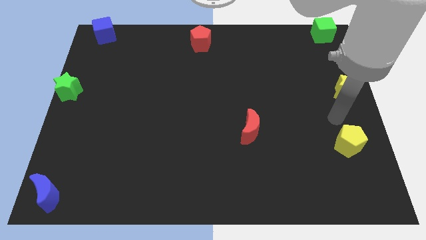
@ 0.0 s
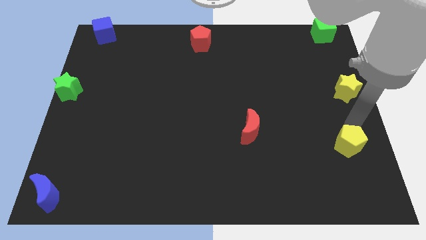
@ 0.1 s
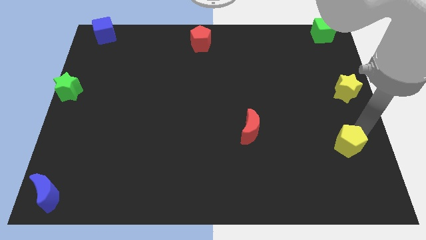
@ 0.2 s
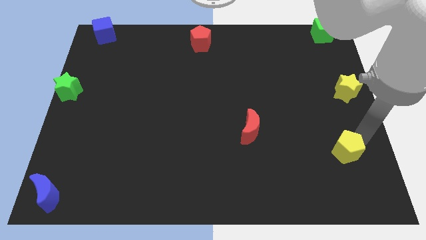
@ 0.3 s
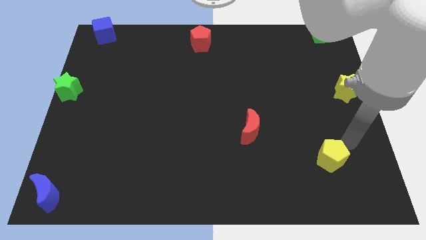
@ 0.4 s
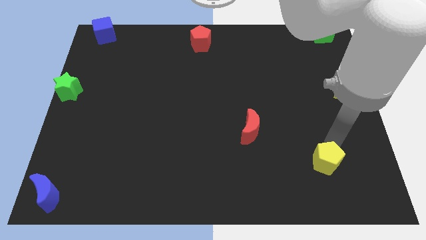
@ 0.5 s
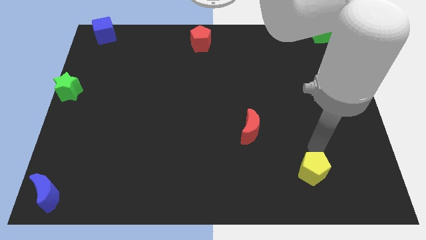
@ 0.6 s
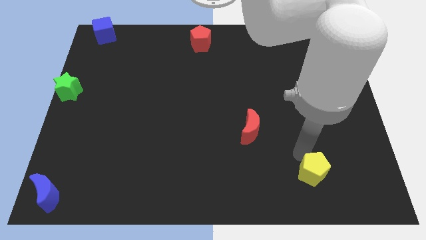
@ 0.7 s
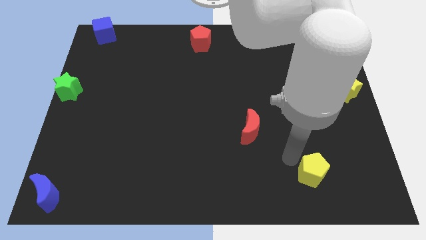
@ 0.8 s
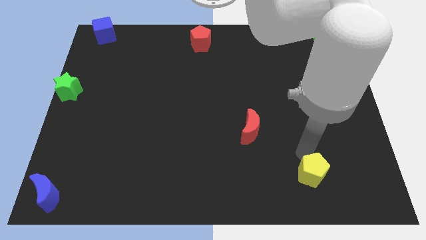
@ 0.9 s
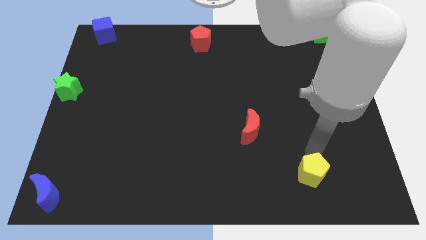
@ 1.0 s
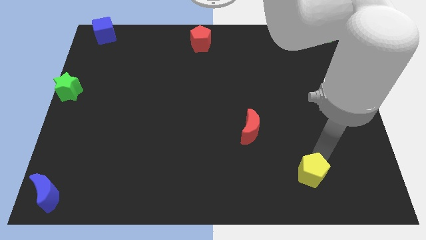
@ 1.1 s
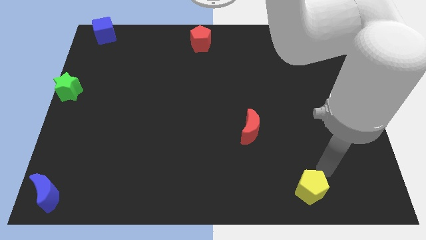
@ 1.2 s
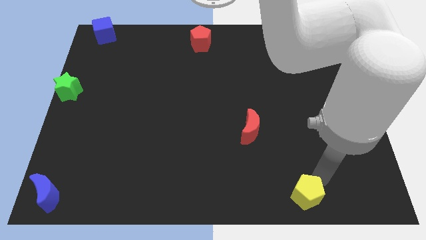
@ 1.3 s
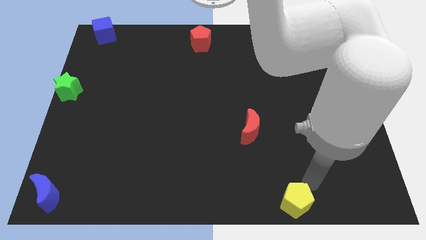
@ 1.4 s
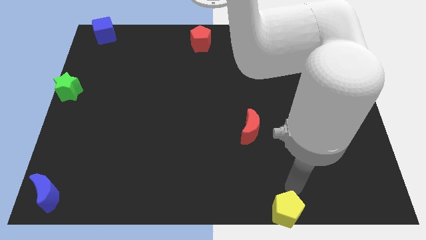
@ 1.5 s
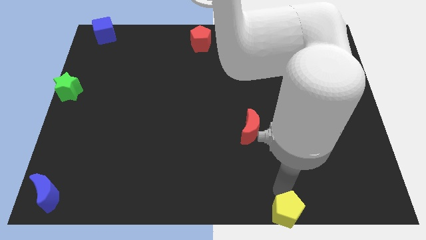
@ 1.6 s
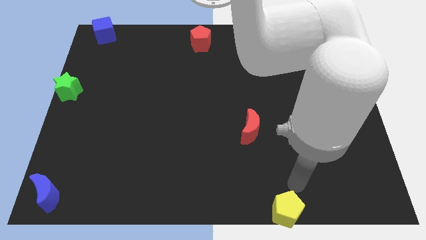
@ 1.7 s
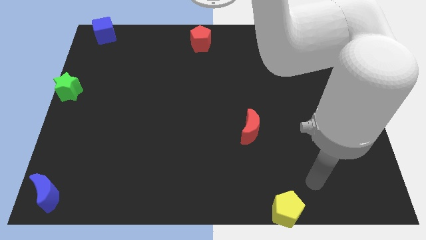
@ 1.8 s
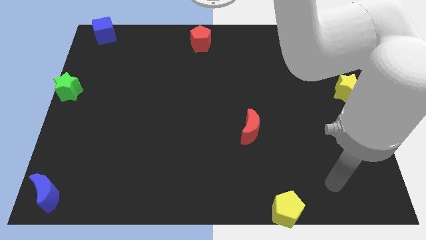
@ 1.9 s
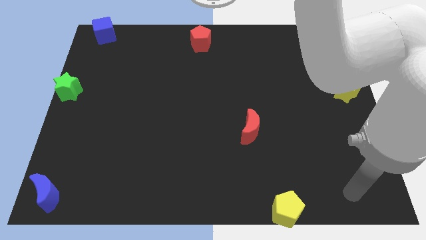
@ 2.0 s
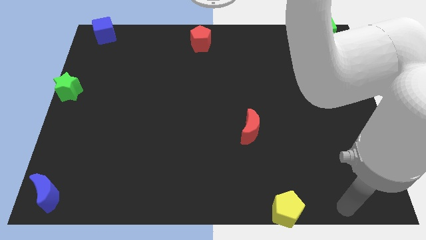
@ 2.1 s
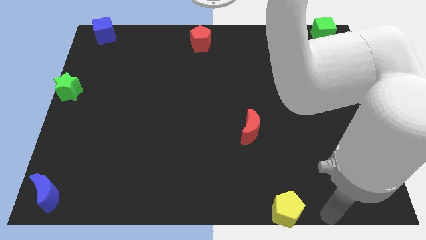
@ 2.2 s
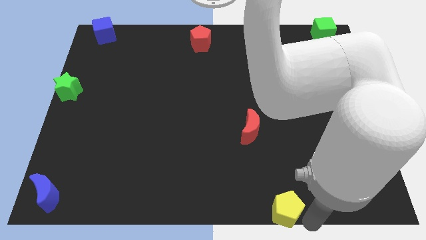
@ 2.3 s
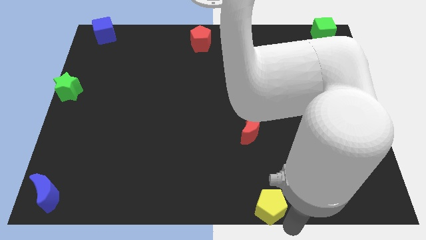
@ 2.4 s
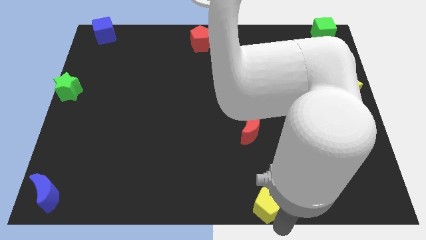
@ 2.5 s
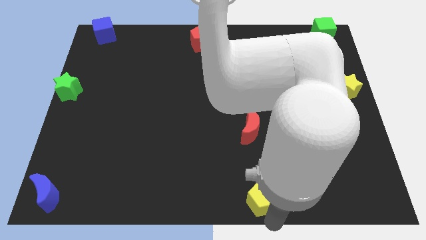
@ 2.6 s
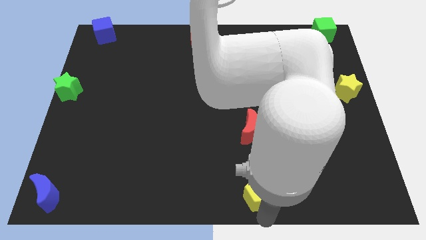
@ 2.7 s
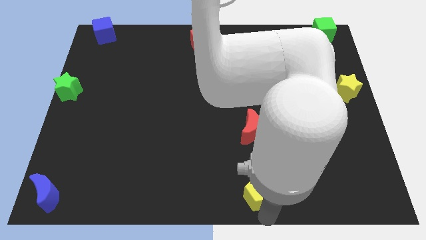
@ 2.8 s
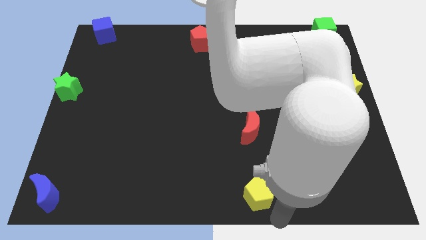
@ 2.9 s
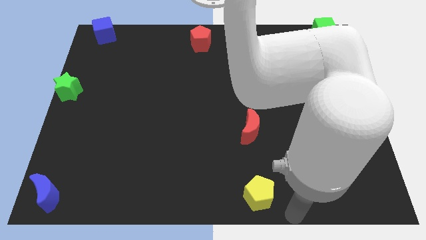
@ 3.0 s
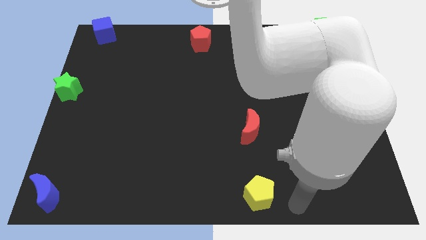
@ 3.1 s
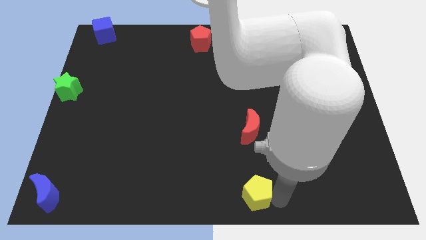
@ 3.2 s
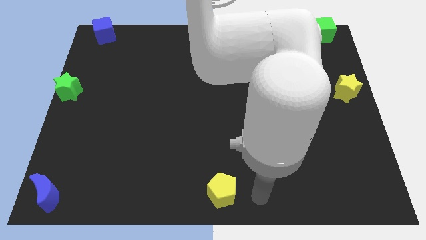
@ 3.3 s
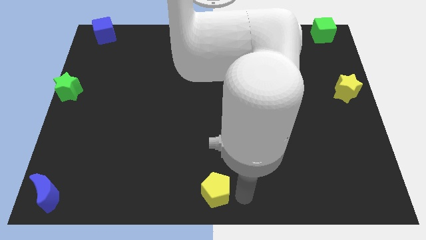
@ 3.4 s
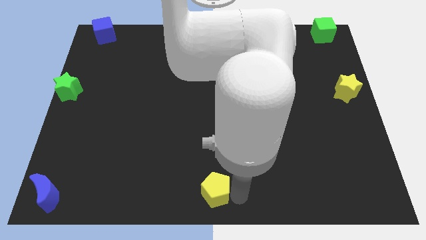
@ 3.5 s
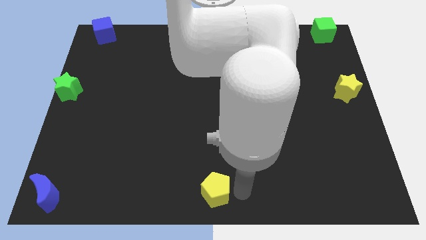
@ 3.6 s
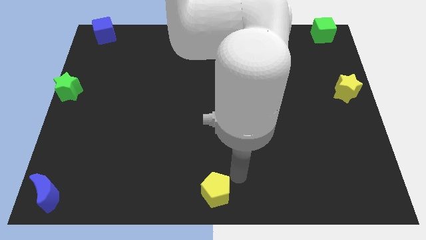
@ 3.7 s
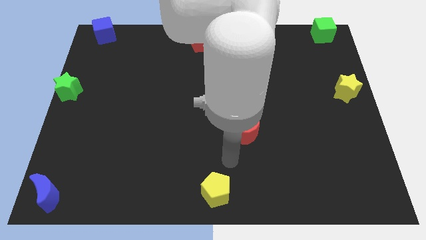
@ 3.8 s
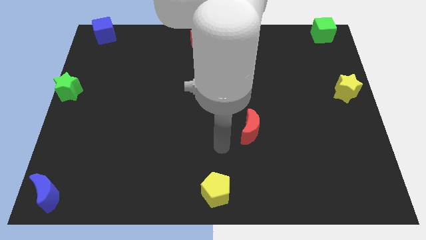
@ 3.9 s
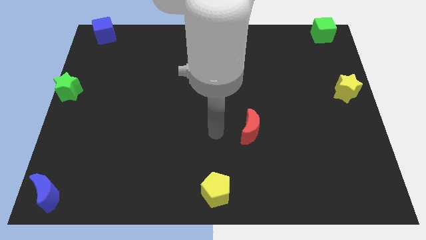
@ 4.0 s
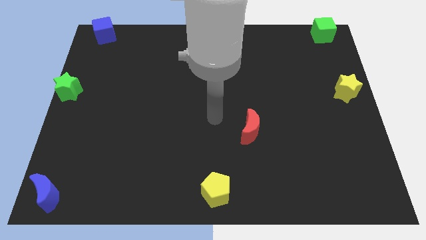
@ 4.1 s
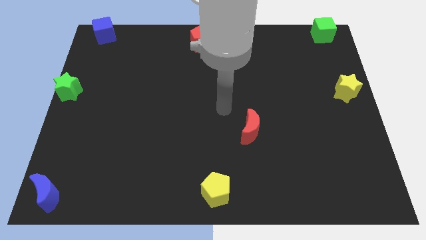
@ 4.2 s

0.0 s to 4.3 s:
move the yellow pentagon to the bottom center of the board

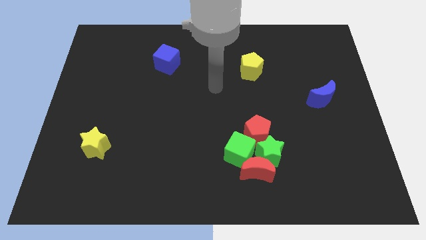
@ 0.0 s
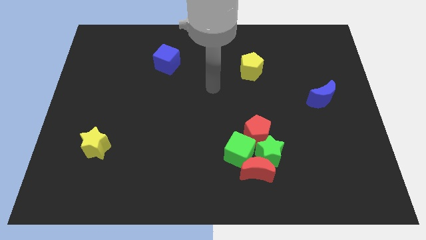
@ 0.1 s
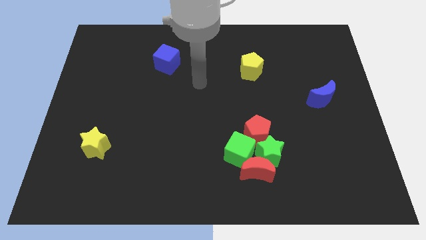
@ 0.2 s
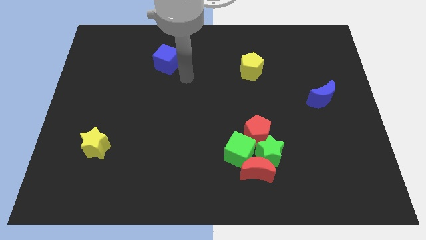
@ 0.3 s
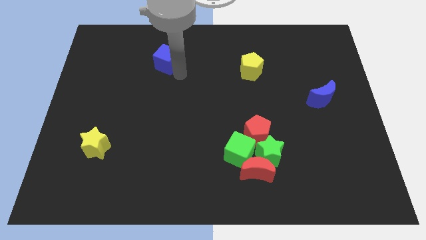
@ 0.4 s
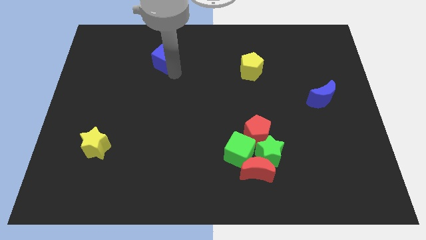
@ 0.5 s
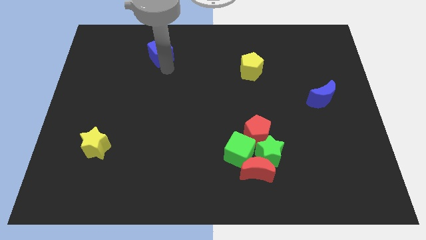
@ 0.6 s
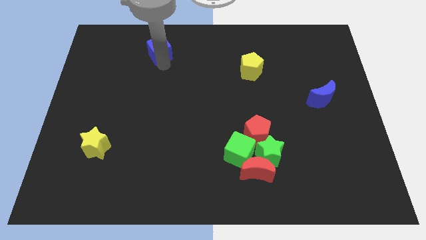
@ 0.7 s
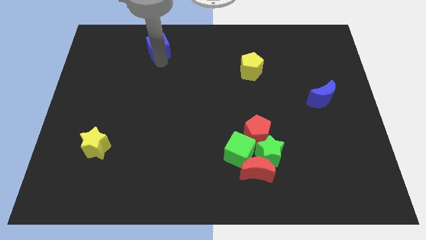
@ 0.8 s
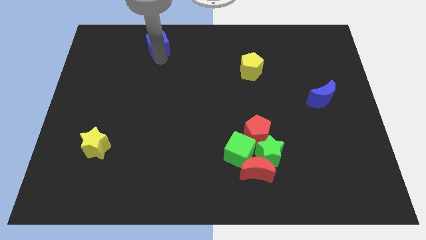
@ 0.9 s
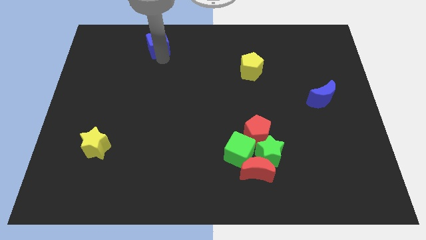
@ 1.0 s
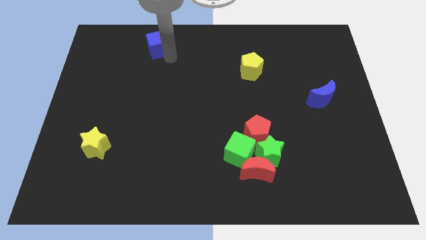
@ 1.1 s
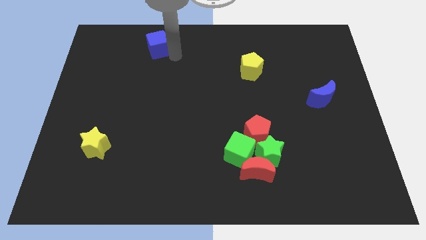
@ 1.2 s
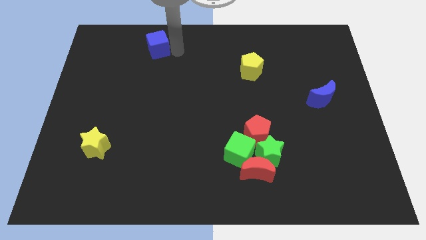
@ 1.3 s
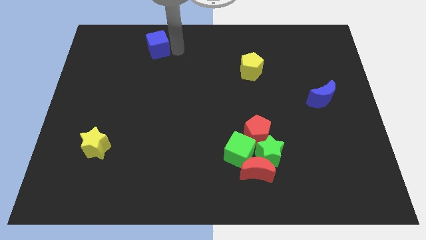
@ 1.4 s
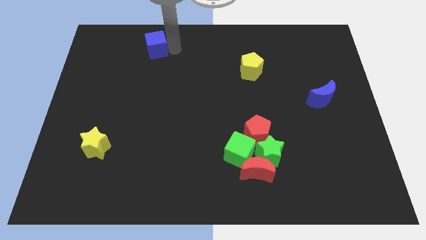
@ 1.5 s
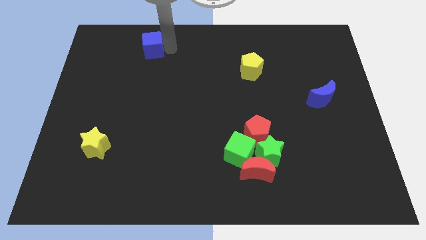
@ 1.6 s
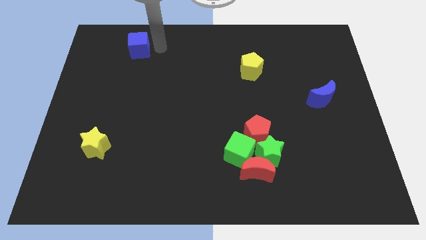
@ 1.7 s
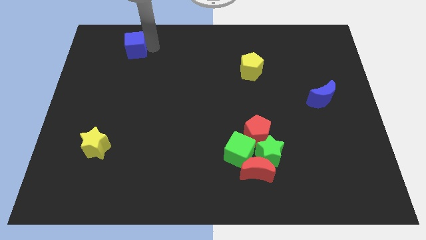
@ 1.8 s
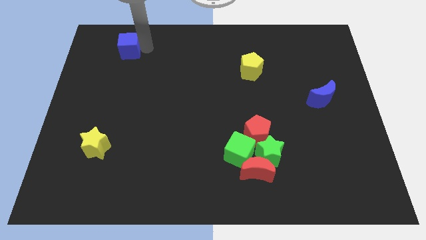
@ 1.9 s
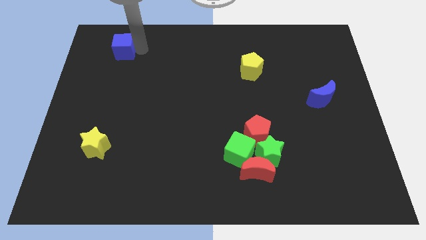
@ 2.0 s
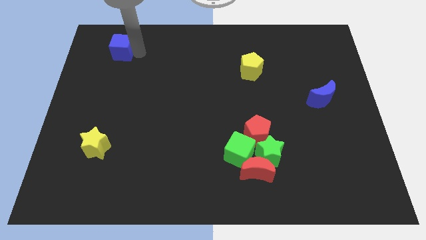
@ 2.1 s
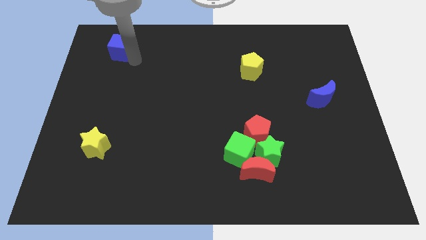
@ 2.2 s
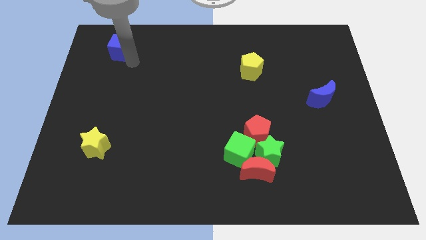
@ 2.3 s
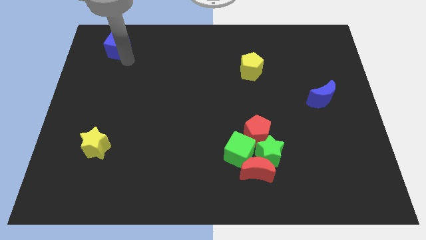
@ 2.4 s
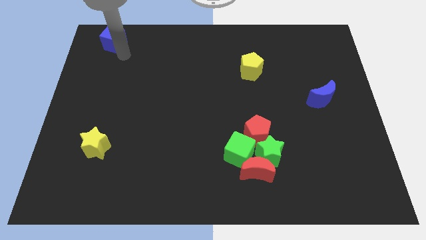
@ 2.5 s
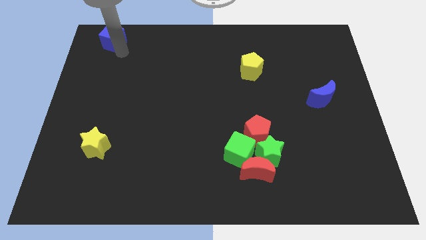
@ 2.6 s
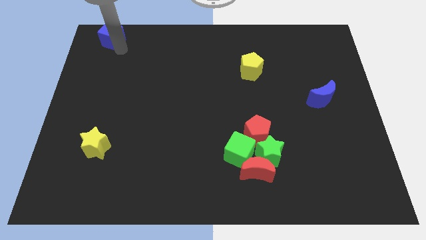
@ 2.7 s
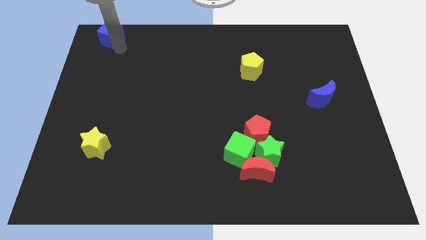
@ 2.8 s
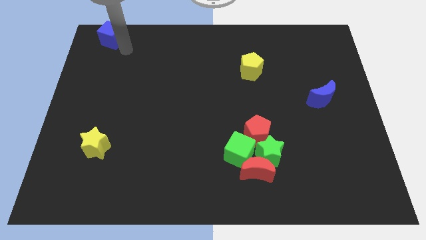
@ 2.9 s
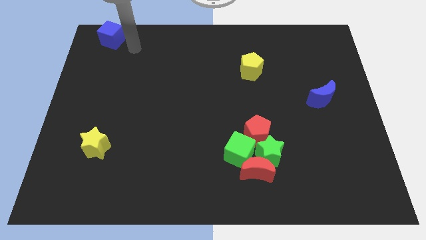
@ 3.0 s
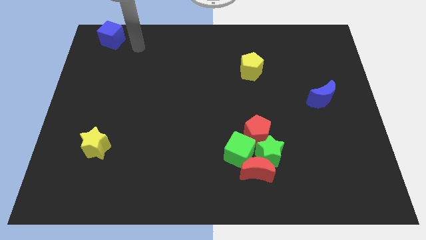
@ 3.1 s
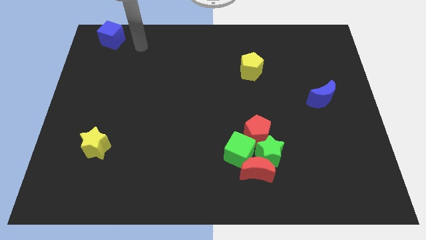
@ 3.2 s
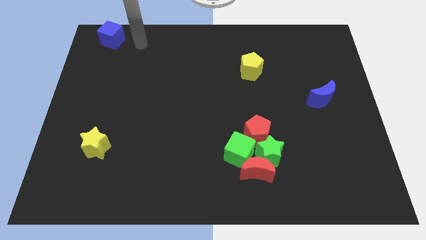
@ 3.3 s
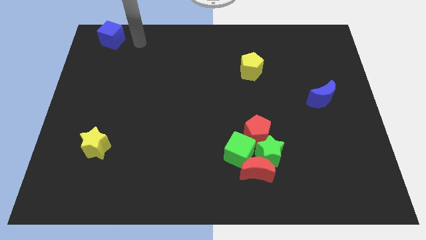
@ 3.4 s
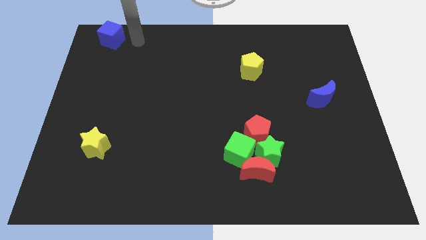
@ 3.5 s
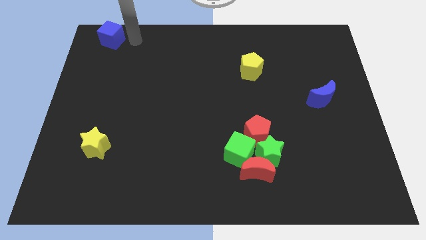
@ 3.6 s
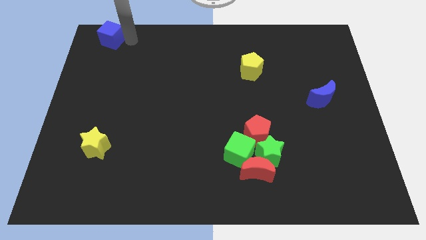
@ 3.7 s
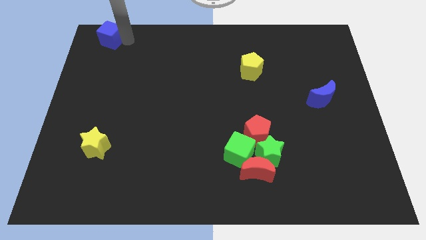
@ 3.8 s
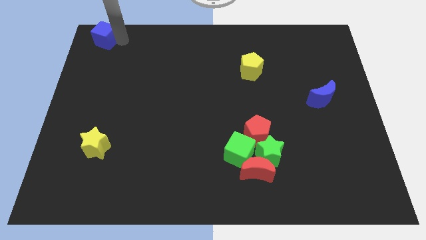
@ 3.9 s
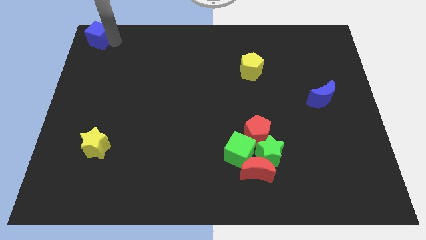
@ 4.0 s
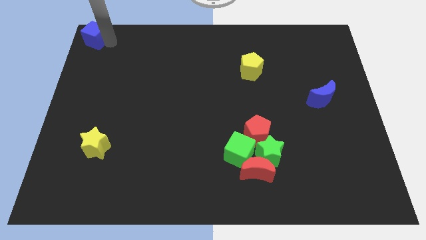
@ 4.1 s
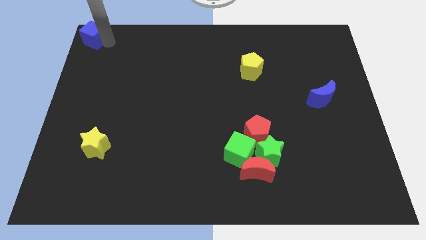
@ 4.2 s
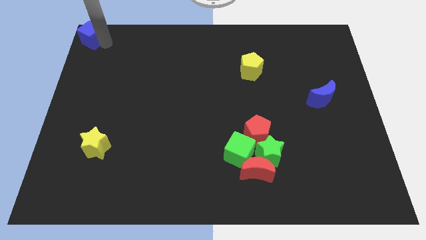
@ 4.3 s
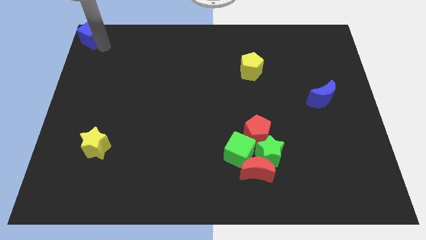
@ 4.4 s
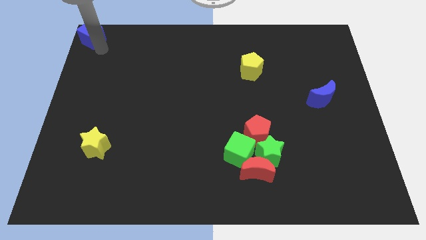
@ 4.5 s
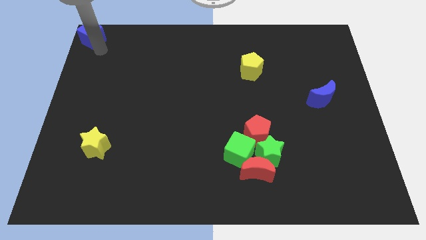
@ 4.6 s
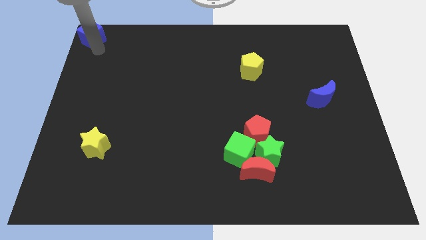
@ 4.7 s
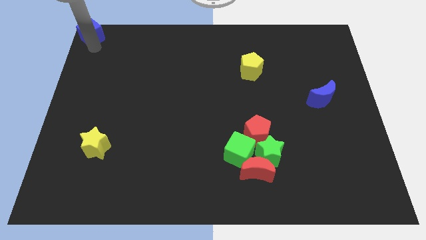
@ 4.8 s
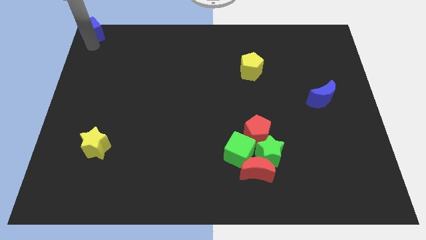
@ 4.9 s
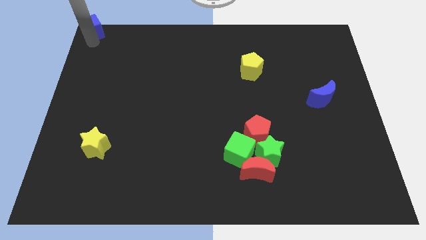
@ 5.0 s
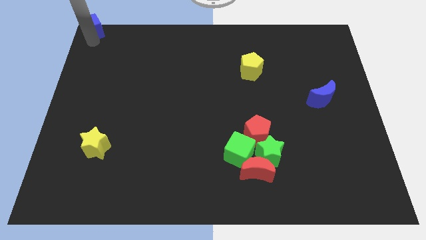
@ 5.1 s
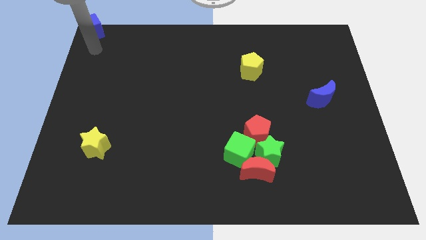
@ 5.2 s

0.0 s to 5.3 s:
put the blue cube at the top left corner of the board
